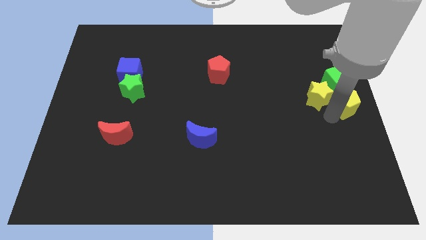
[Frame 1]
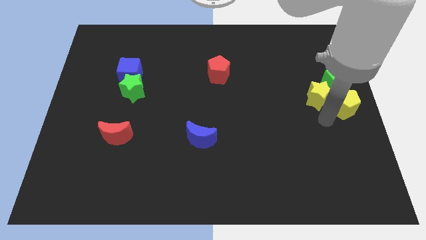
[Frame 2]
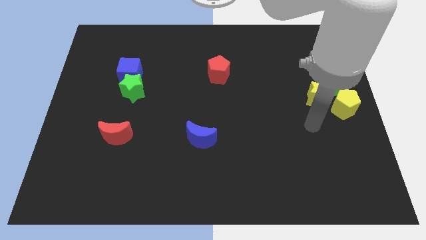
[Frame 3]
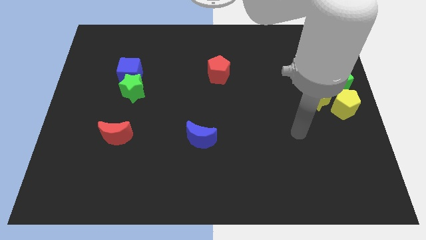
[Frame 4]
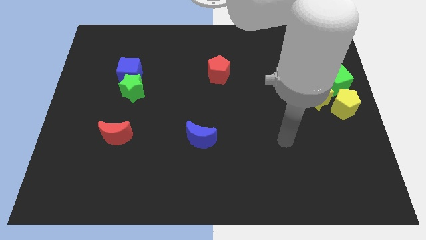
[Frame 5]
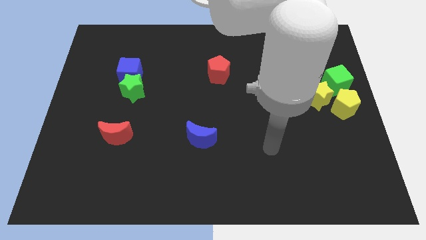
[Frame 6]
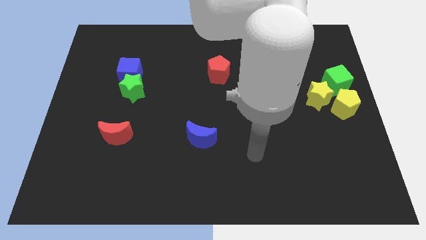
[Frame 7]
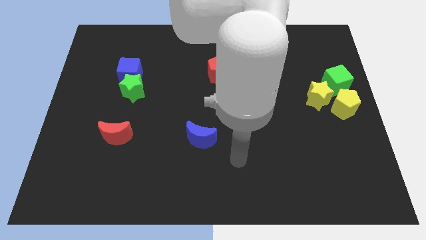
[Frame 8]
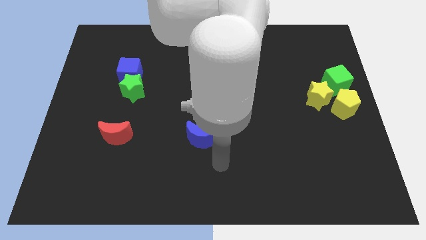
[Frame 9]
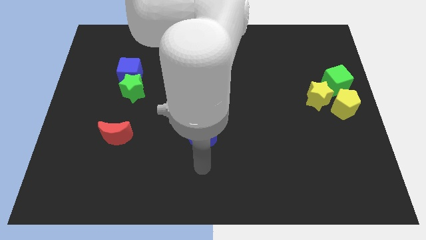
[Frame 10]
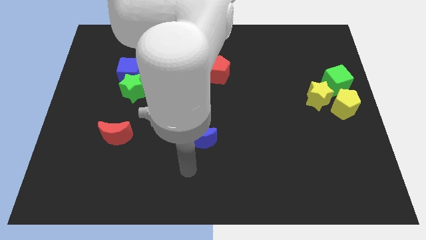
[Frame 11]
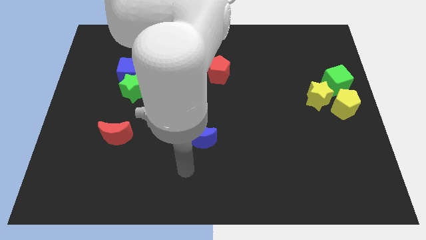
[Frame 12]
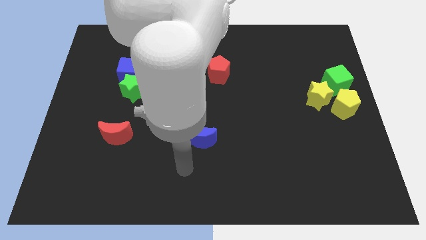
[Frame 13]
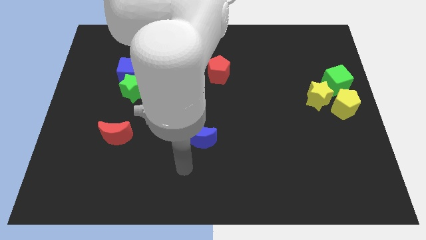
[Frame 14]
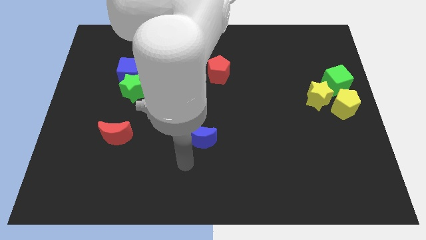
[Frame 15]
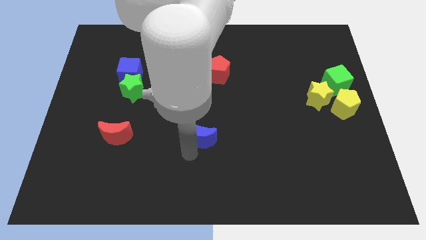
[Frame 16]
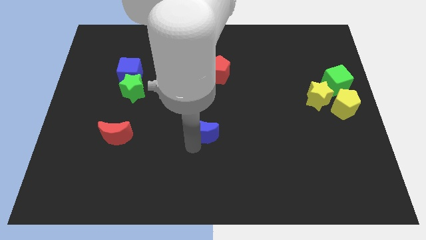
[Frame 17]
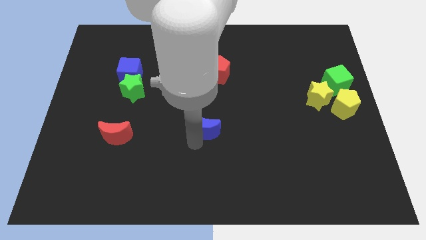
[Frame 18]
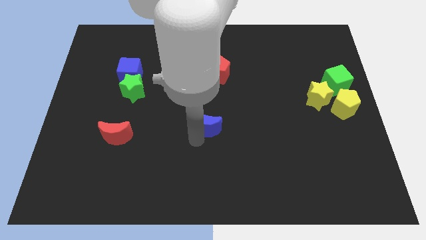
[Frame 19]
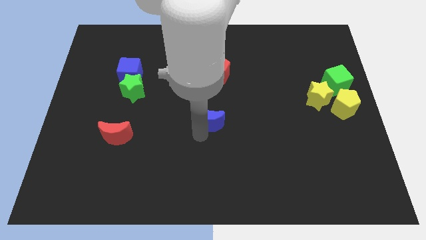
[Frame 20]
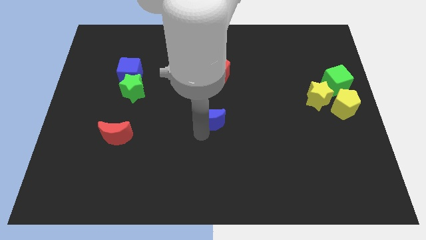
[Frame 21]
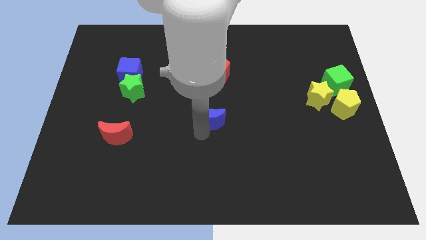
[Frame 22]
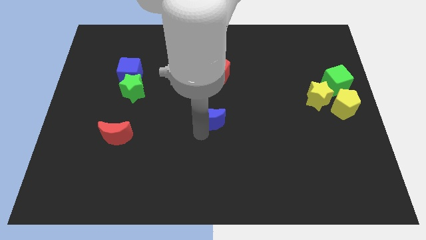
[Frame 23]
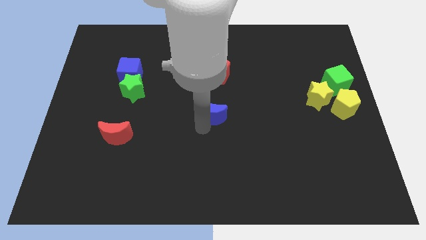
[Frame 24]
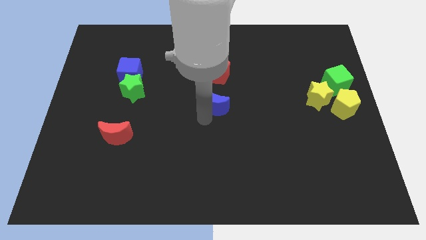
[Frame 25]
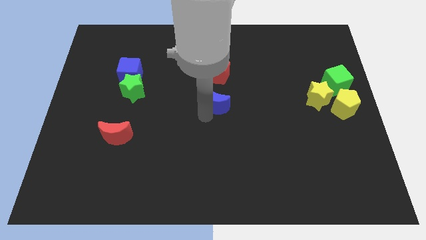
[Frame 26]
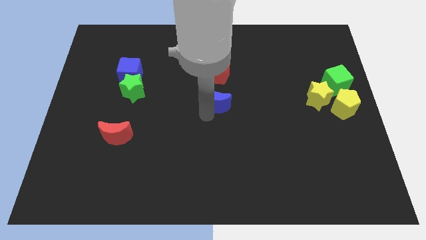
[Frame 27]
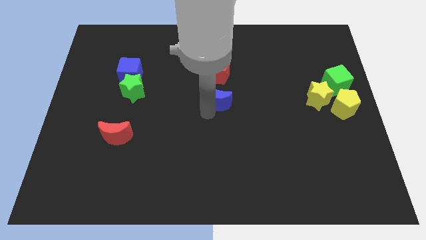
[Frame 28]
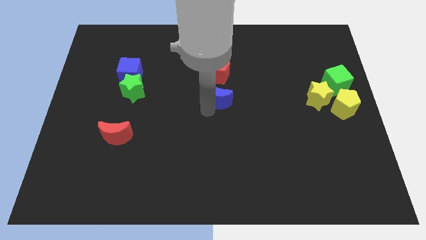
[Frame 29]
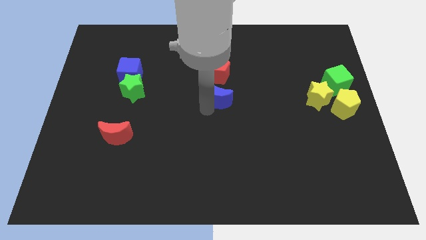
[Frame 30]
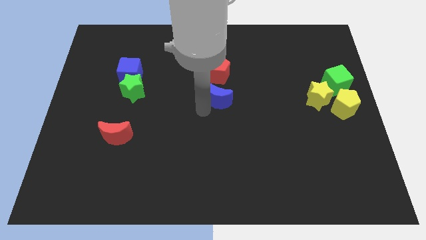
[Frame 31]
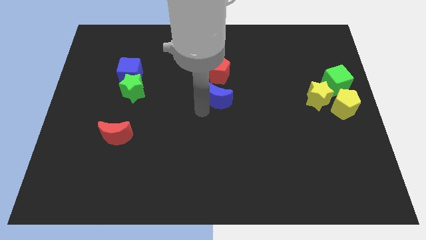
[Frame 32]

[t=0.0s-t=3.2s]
move blue crescent below red pentagon

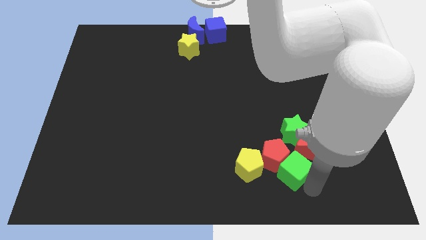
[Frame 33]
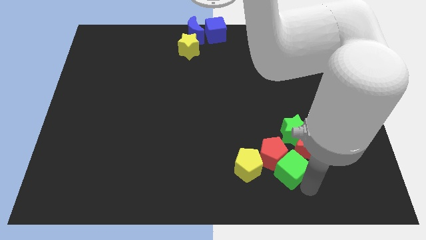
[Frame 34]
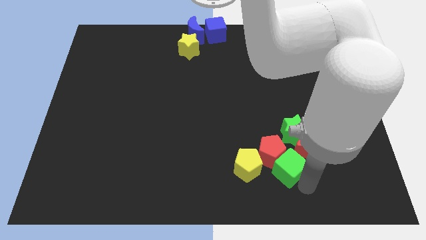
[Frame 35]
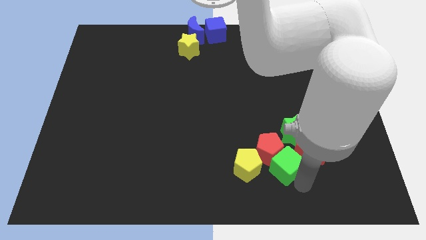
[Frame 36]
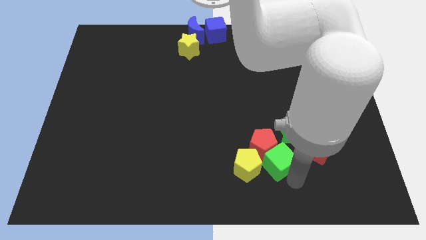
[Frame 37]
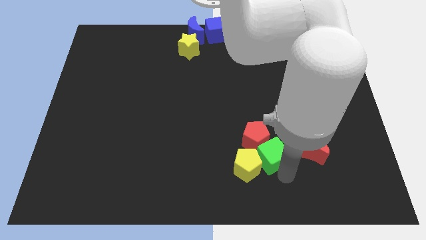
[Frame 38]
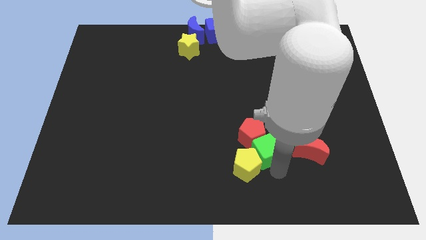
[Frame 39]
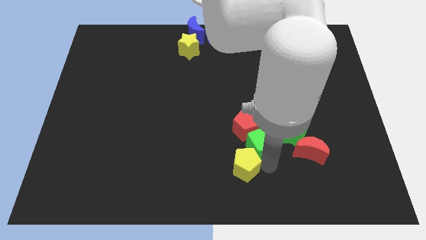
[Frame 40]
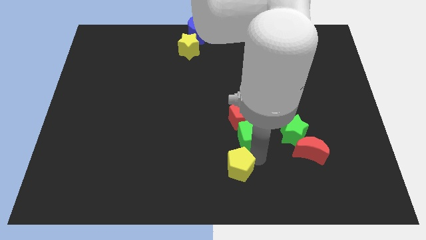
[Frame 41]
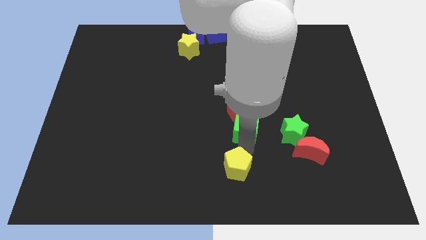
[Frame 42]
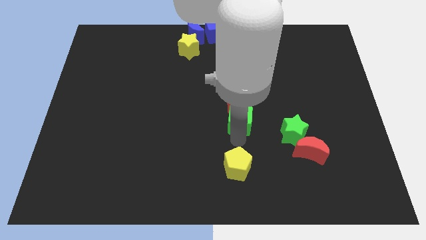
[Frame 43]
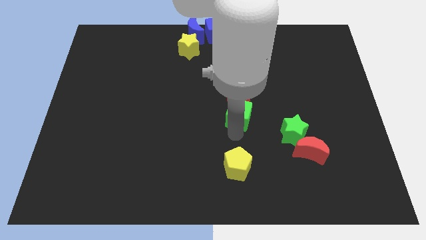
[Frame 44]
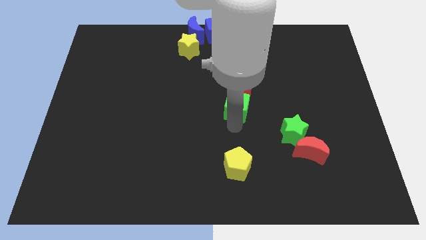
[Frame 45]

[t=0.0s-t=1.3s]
move the green cube and red pentagon towards top center

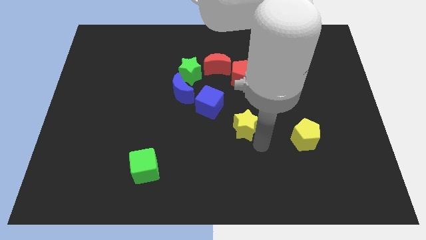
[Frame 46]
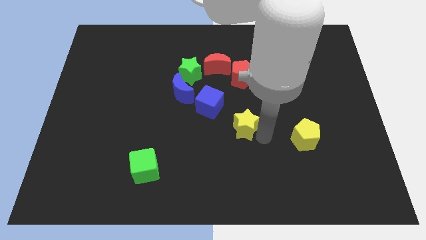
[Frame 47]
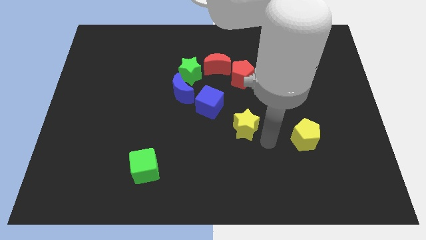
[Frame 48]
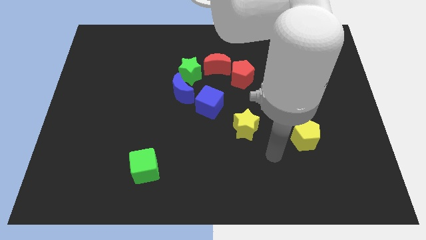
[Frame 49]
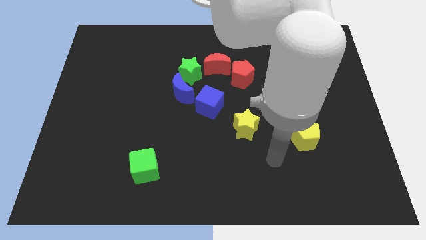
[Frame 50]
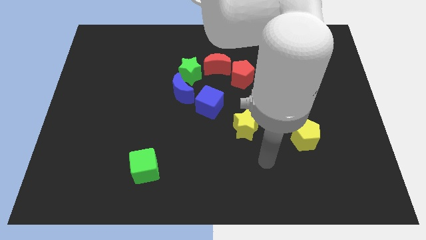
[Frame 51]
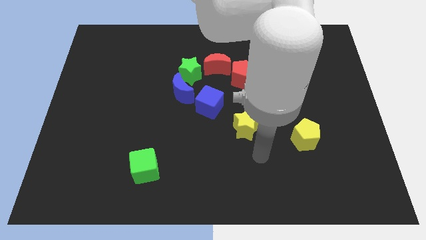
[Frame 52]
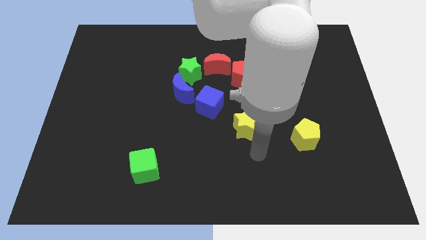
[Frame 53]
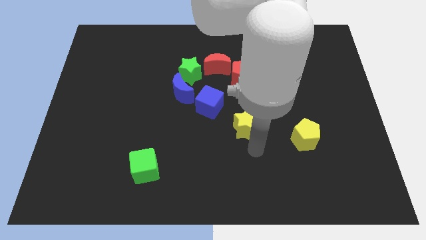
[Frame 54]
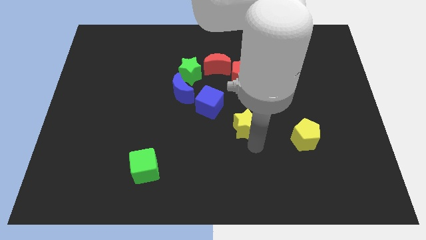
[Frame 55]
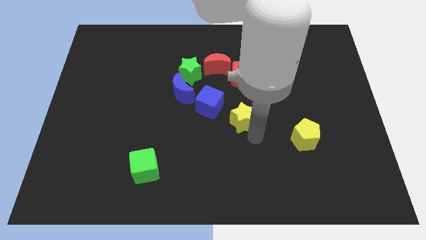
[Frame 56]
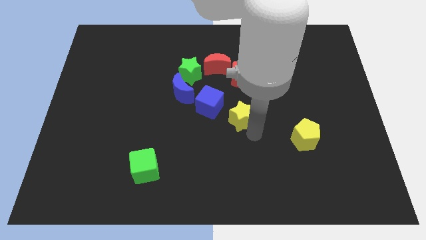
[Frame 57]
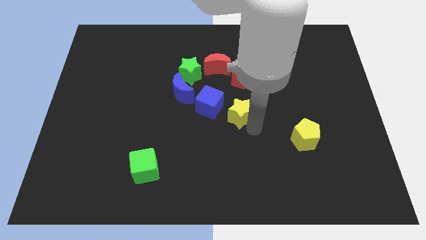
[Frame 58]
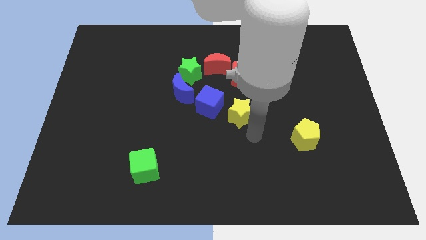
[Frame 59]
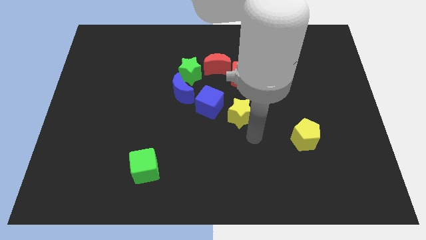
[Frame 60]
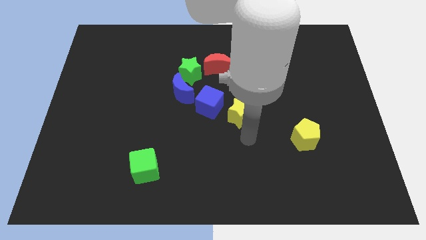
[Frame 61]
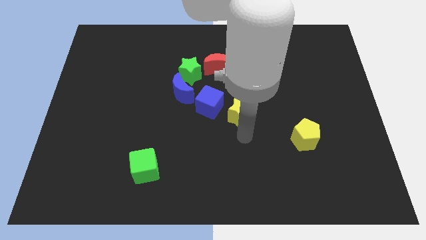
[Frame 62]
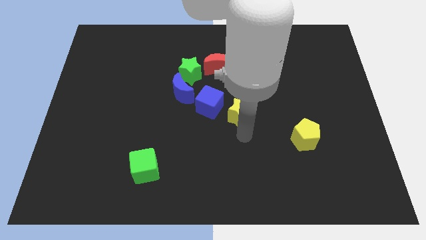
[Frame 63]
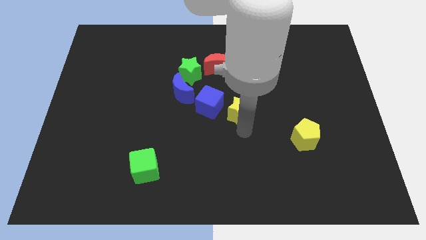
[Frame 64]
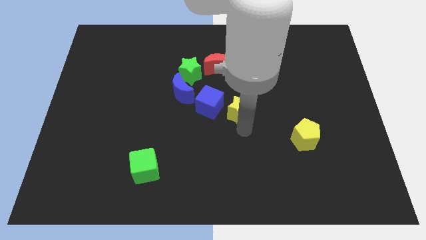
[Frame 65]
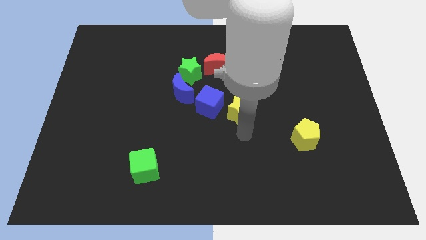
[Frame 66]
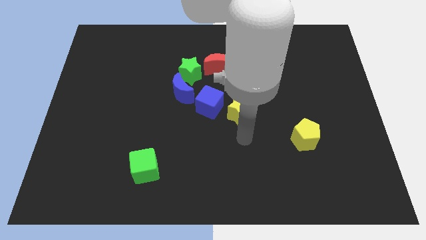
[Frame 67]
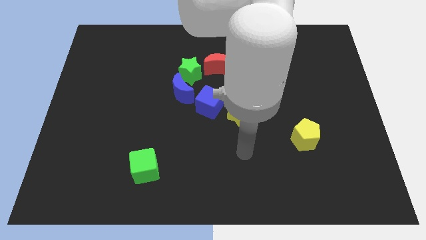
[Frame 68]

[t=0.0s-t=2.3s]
place yellow star to the right of blue cube

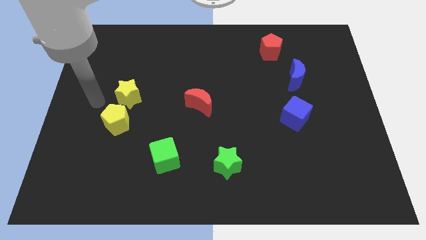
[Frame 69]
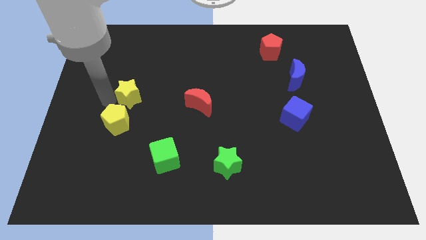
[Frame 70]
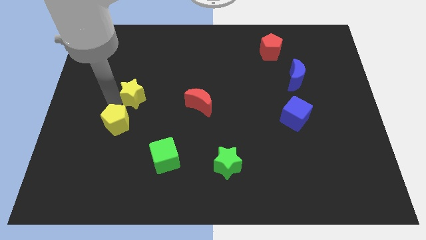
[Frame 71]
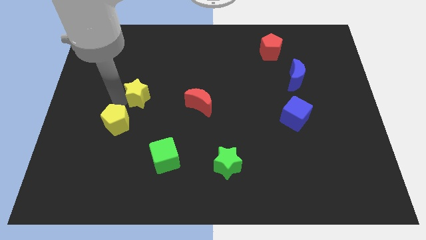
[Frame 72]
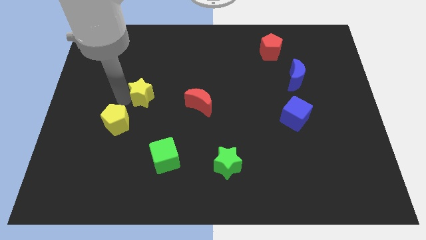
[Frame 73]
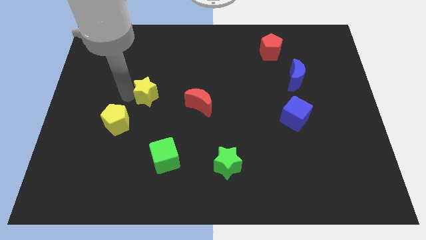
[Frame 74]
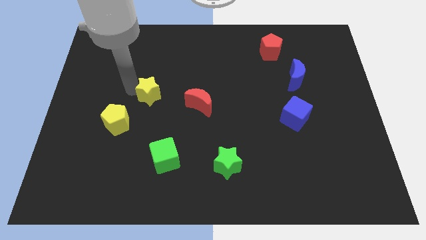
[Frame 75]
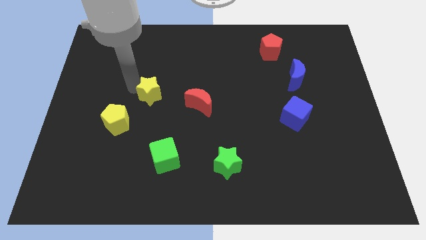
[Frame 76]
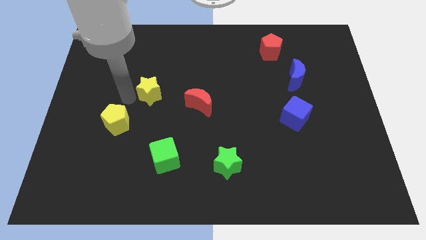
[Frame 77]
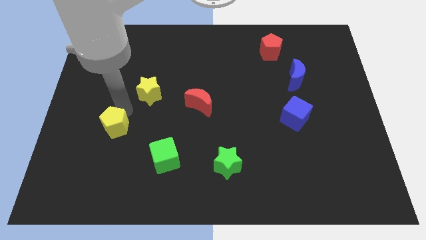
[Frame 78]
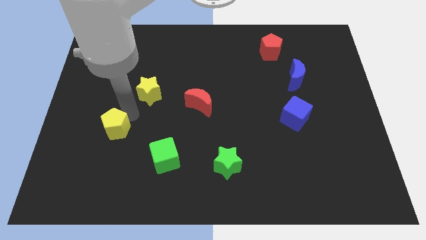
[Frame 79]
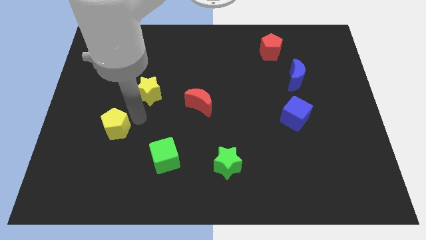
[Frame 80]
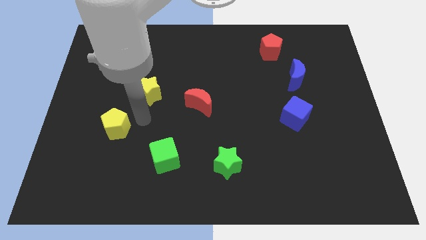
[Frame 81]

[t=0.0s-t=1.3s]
separate the yellow star from the yellow pentagon

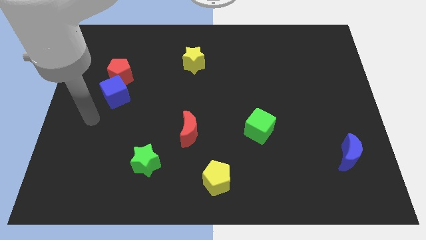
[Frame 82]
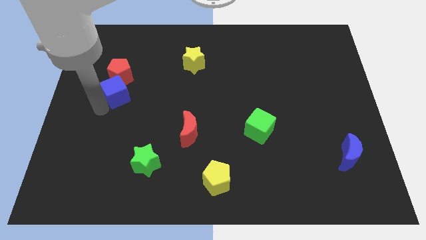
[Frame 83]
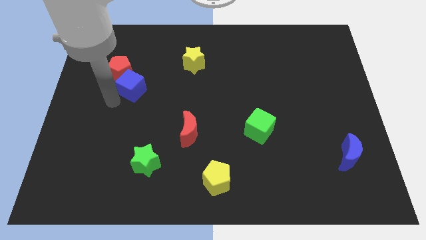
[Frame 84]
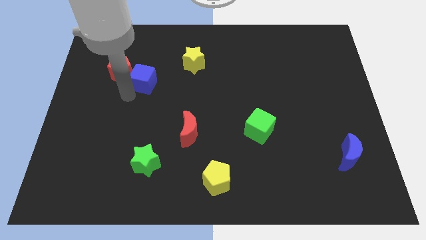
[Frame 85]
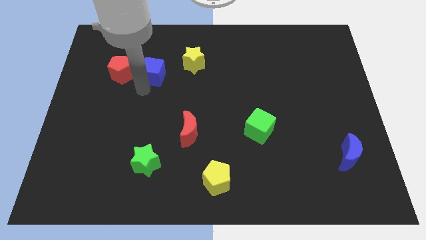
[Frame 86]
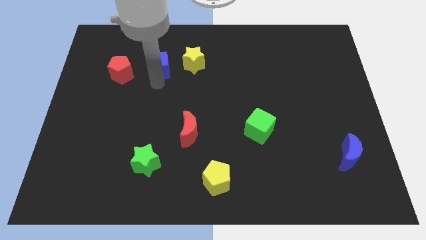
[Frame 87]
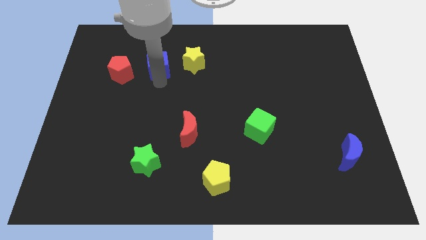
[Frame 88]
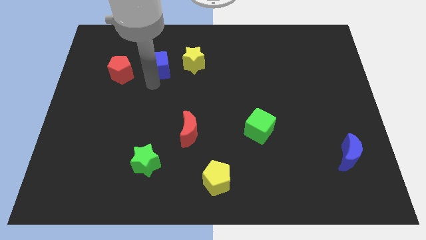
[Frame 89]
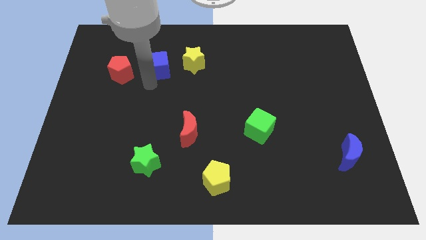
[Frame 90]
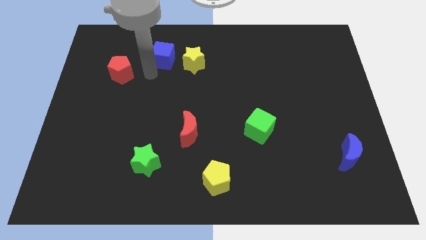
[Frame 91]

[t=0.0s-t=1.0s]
push blue cube in between red pentagon and yellow star
